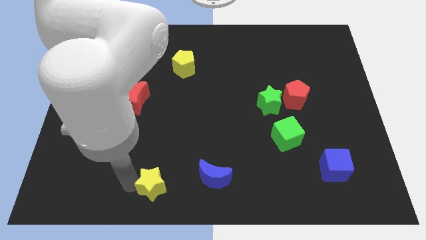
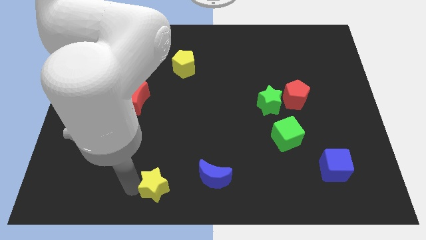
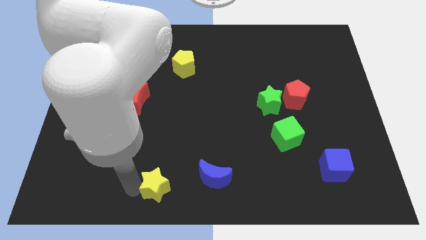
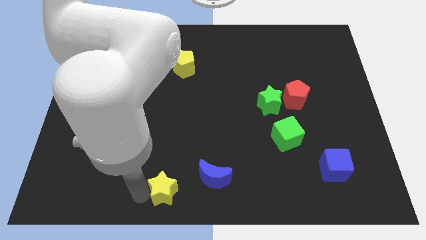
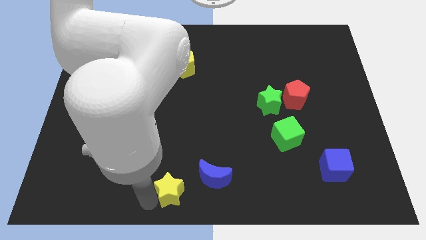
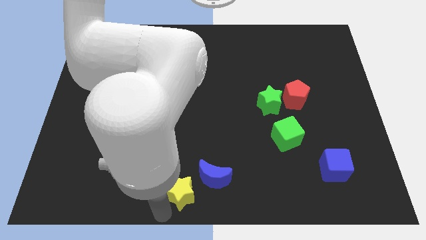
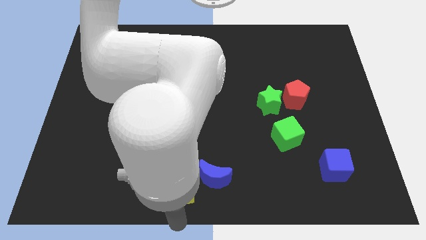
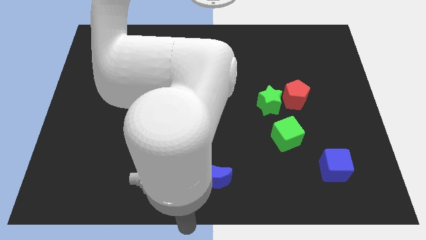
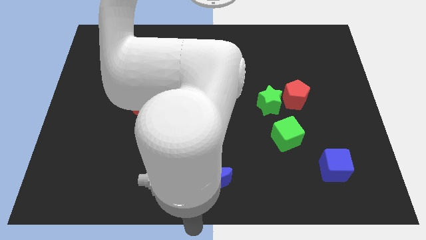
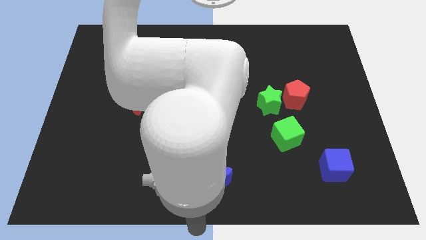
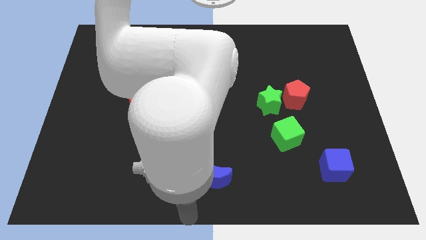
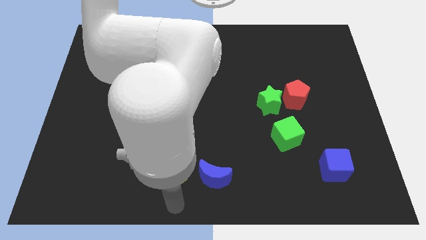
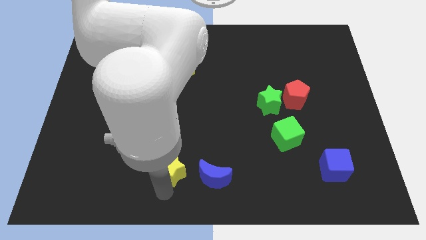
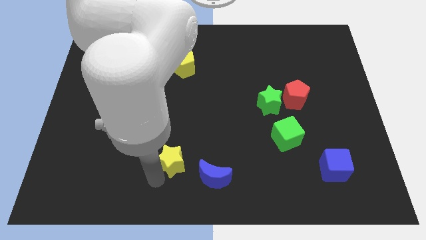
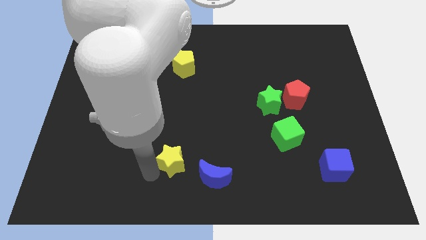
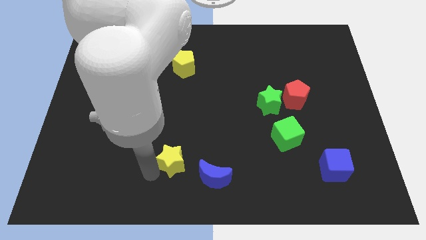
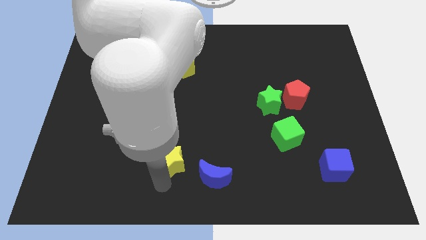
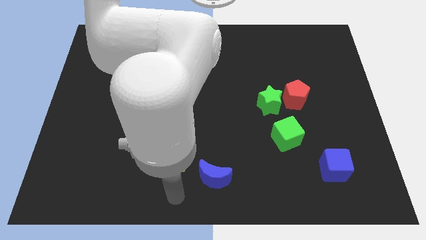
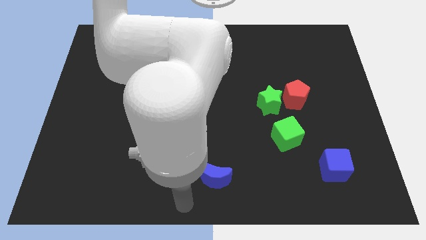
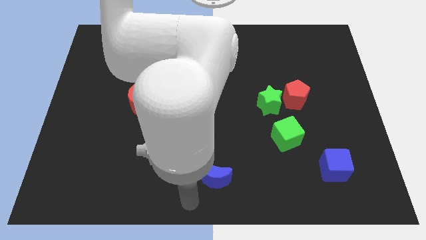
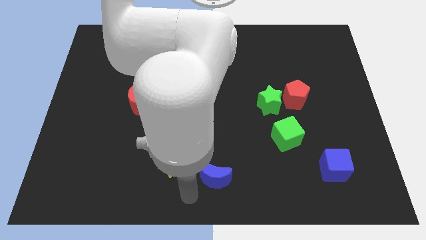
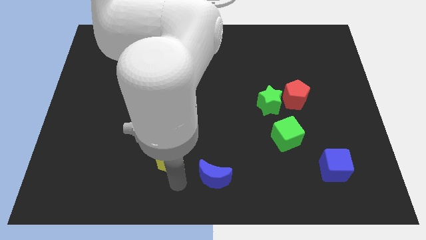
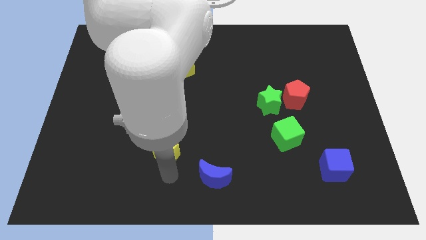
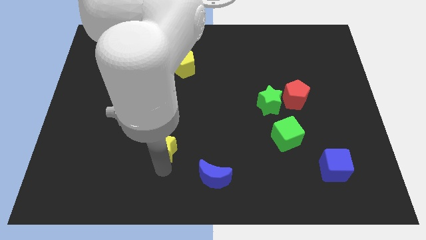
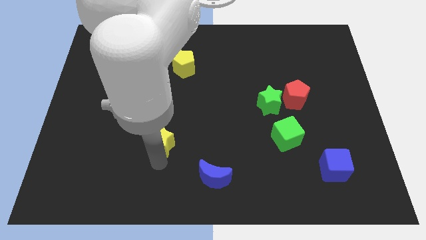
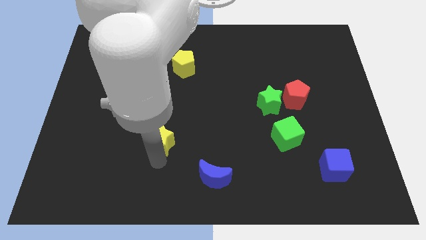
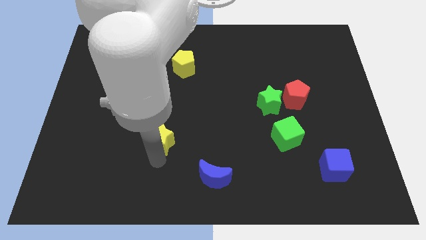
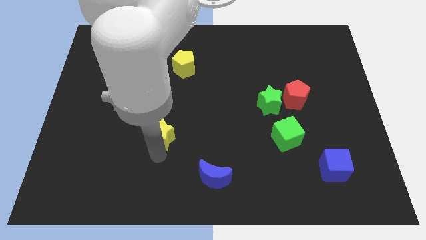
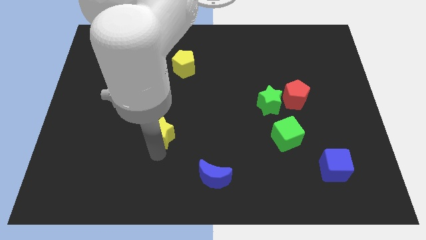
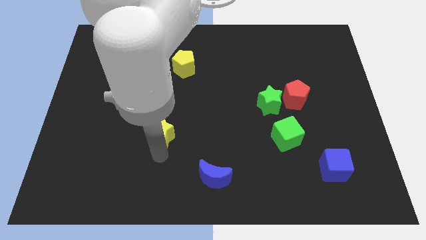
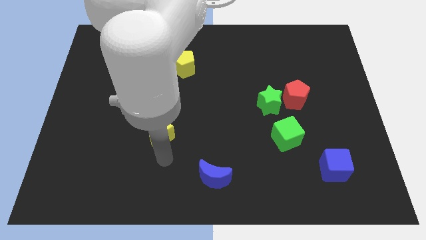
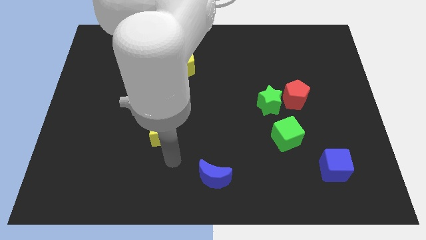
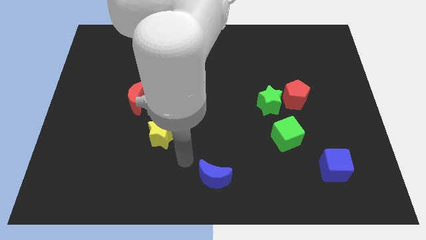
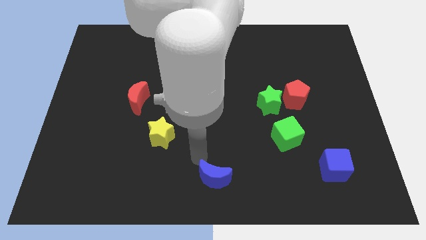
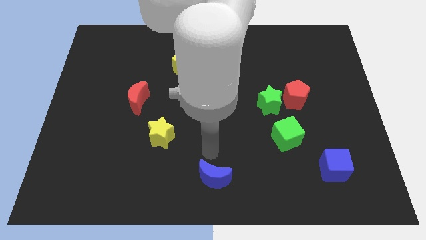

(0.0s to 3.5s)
place the yellow star diagonal to the blue moon

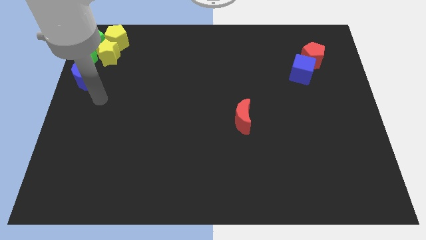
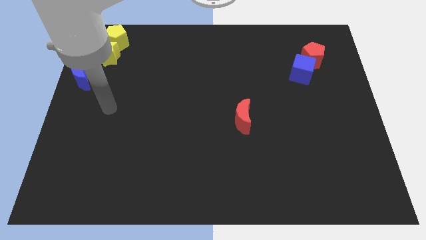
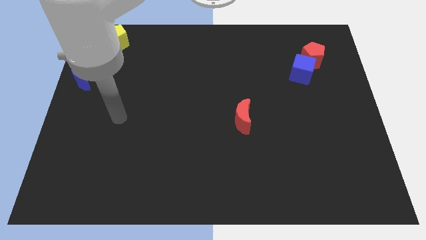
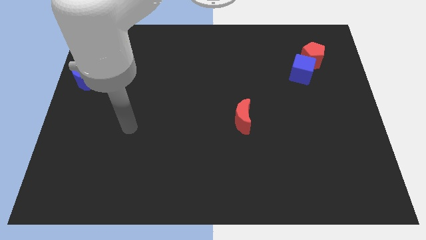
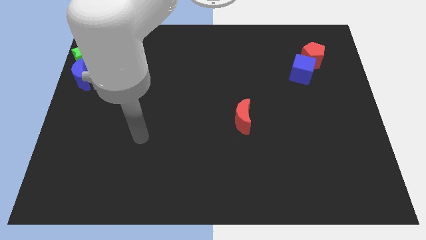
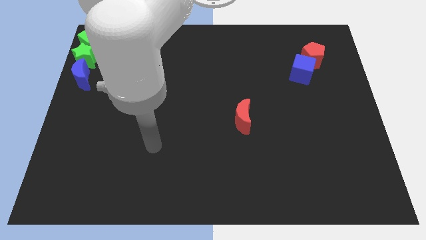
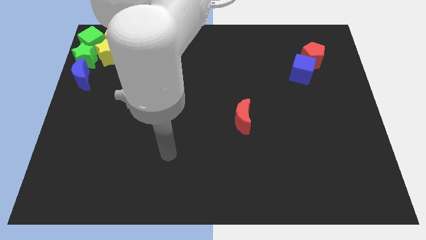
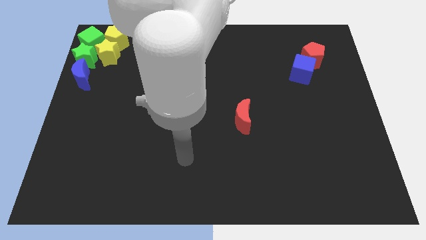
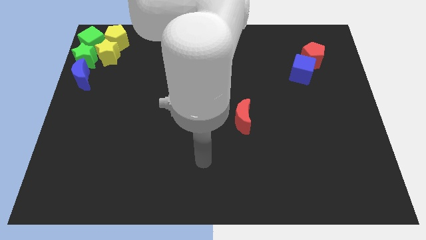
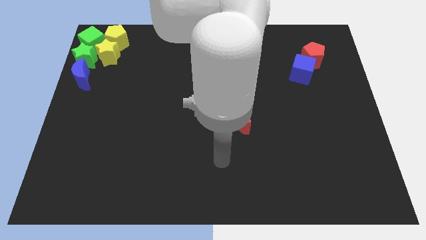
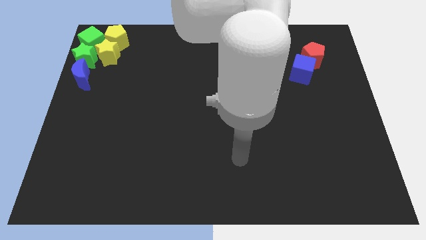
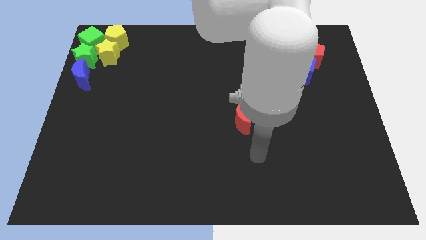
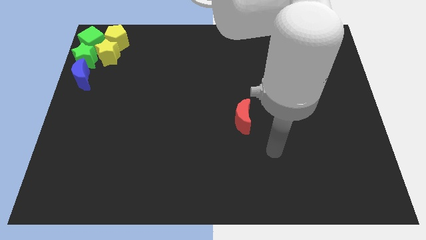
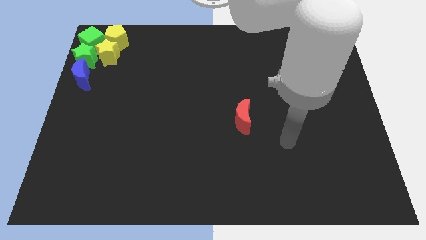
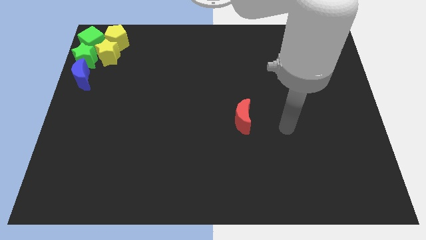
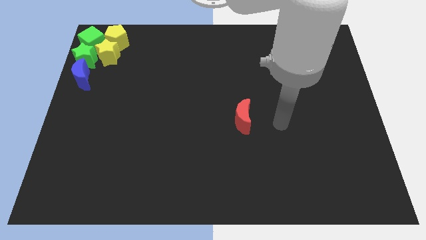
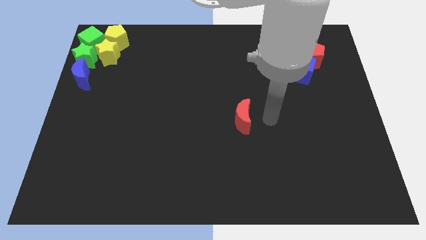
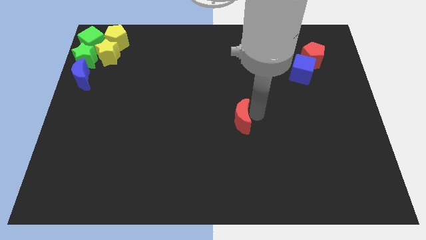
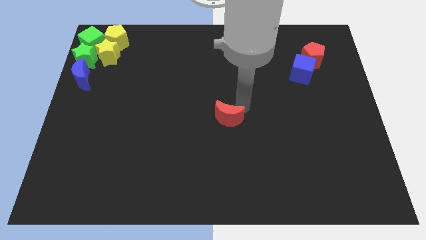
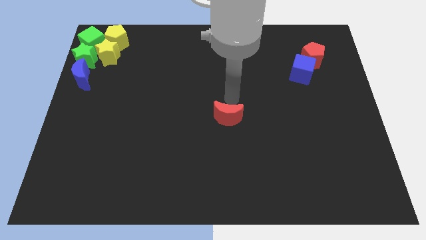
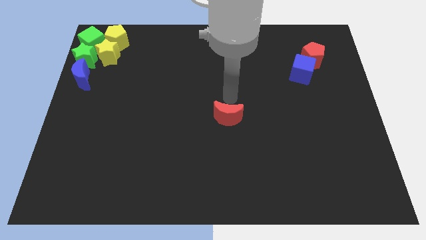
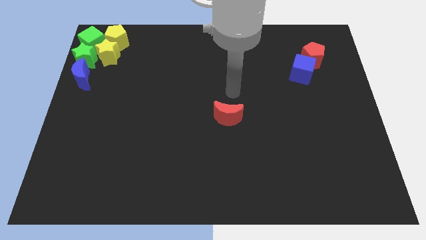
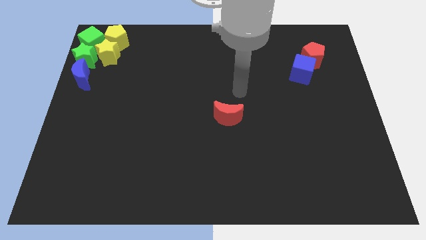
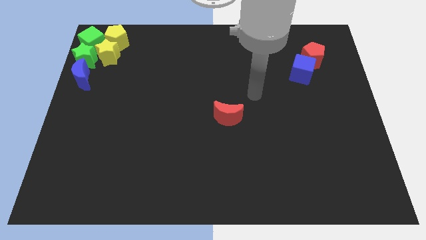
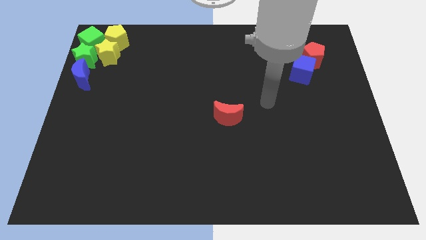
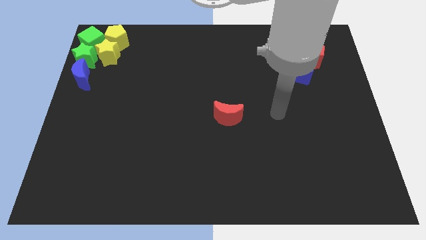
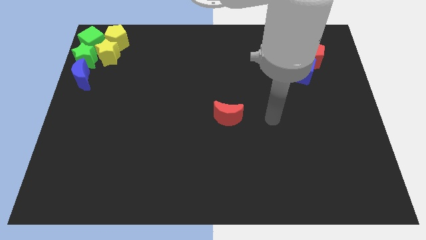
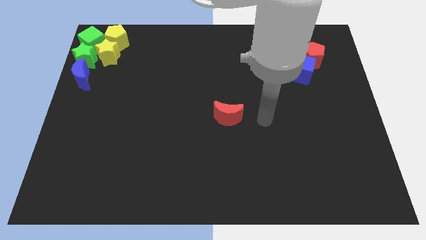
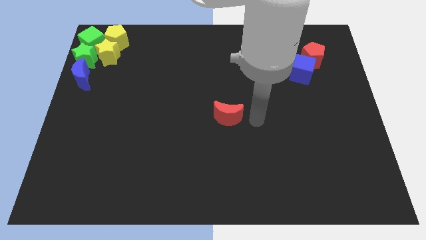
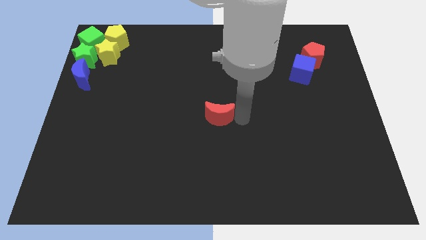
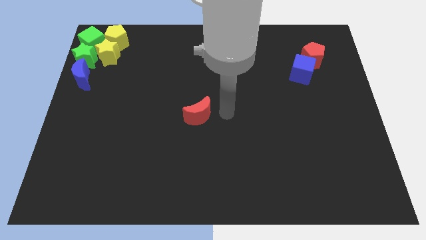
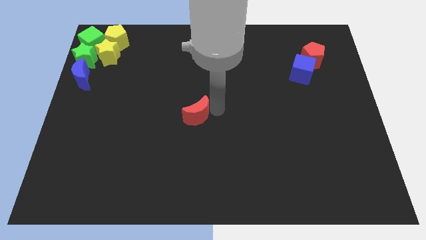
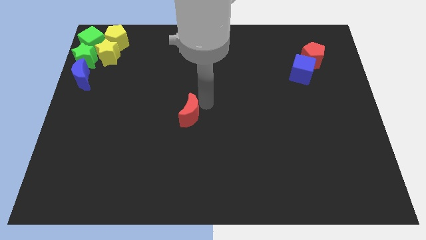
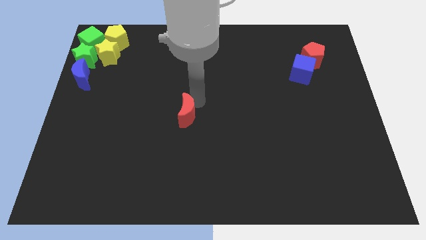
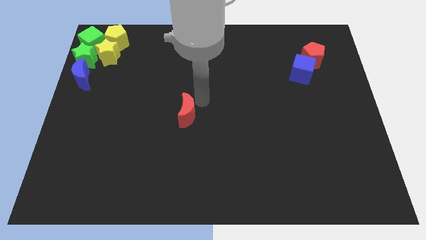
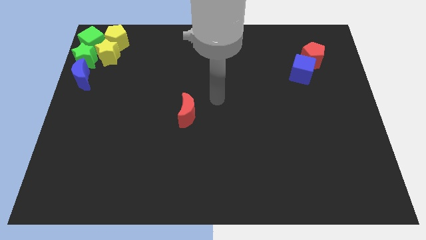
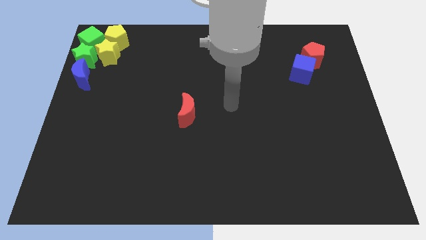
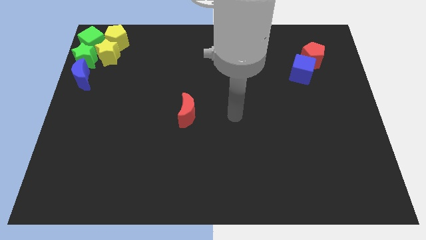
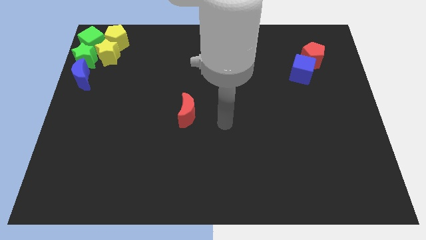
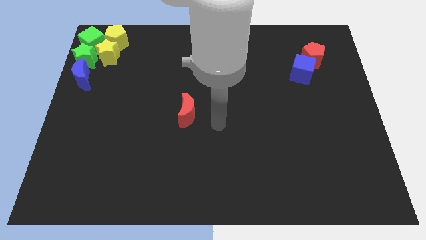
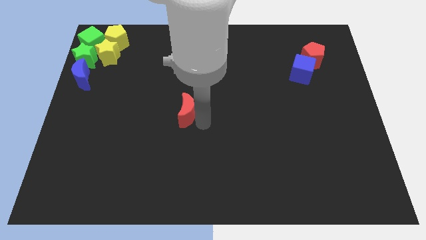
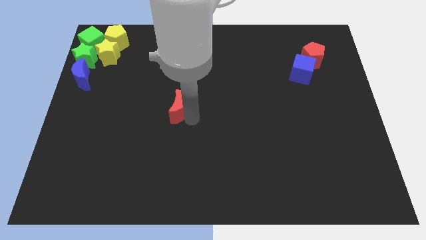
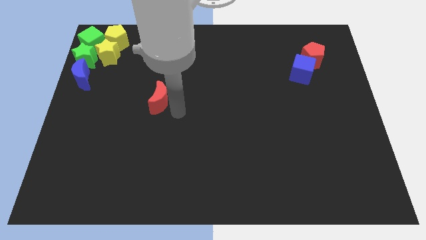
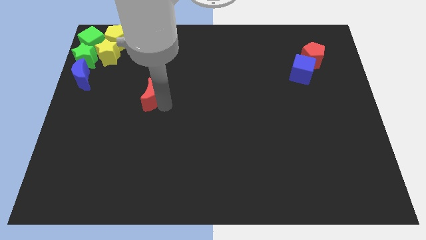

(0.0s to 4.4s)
move the red moon to the left

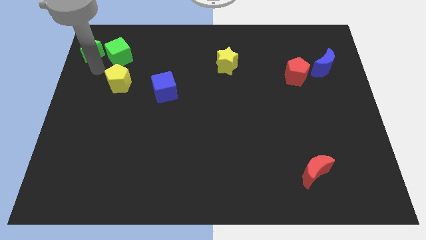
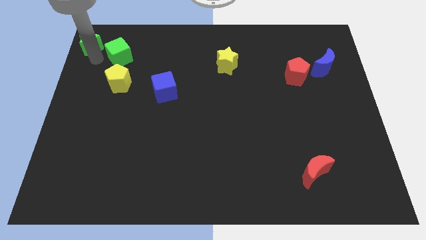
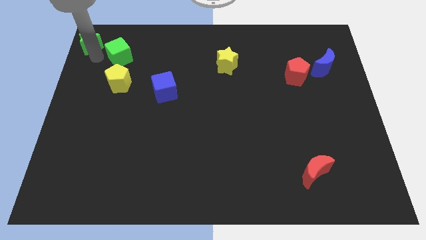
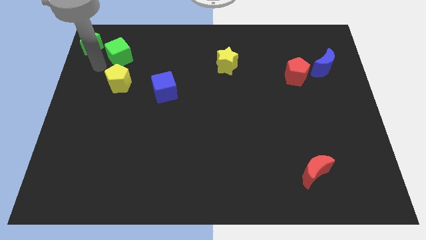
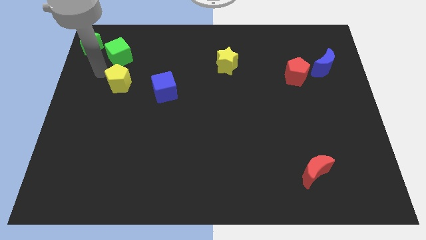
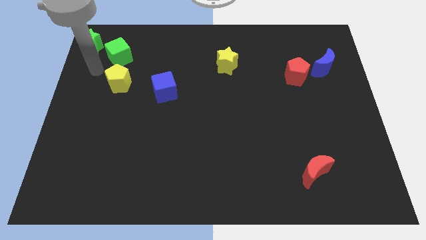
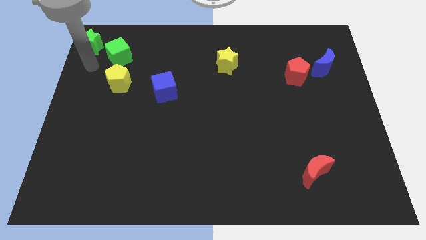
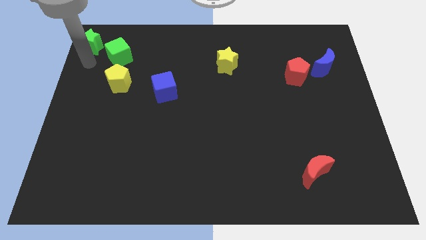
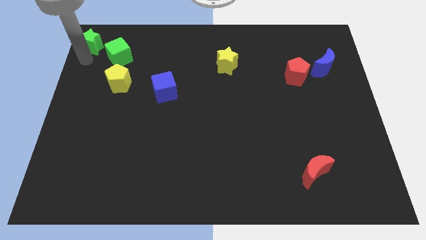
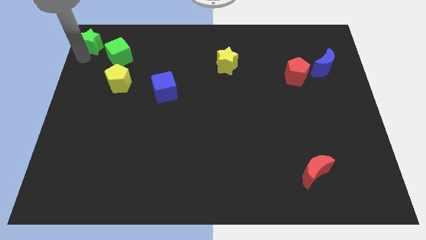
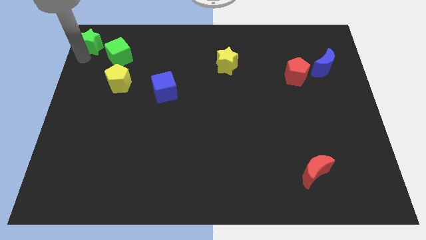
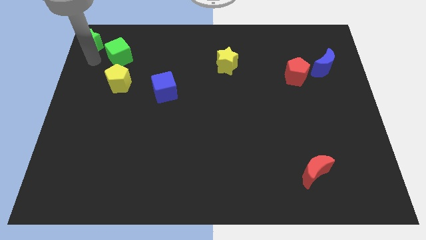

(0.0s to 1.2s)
push the green star towards the top left corner of the board
